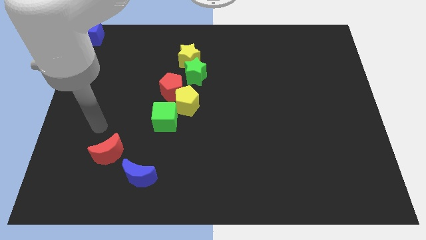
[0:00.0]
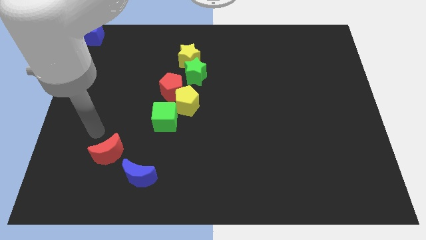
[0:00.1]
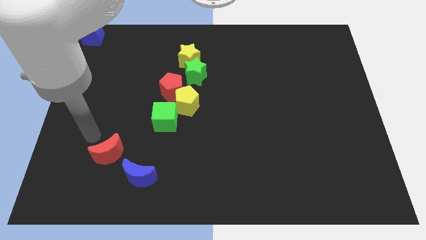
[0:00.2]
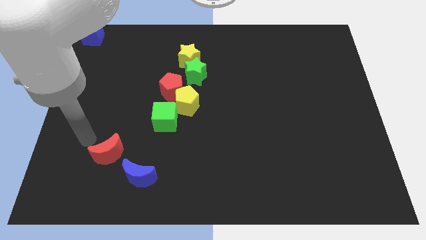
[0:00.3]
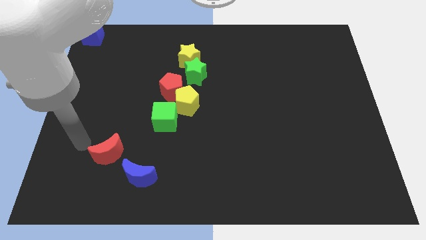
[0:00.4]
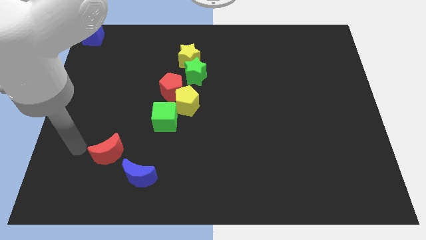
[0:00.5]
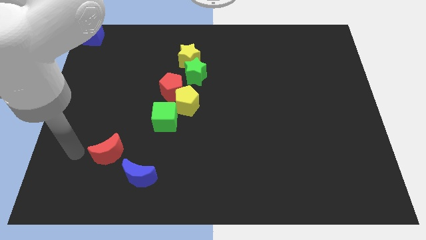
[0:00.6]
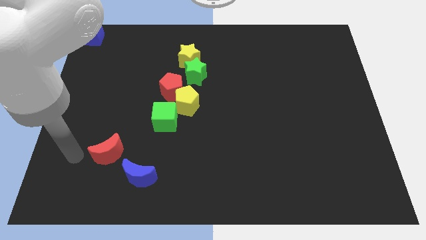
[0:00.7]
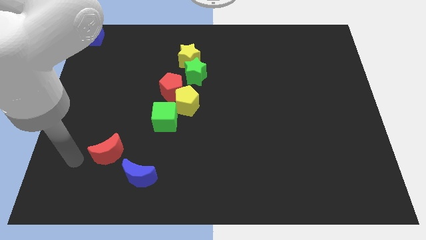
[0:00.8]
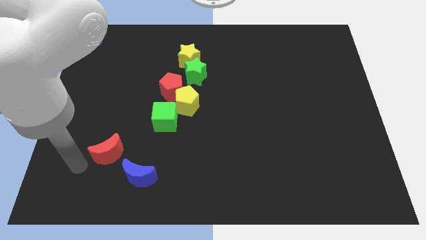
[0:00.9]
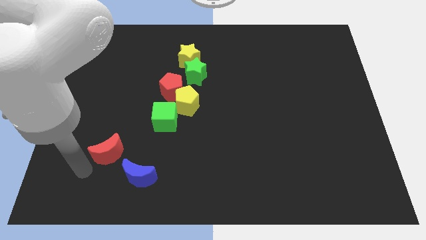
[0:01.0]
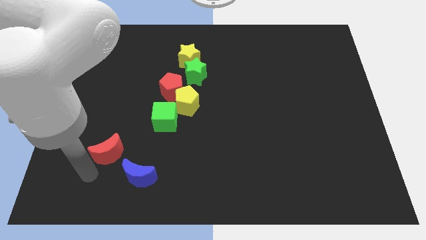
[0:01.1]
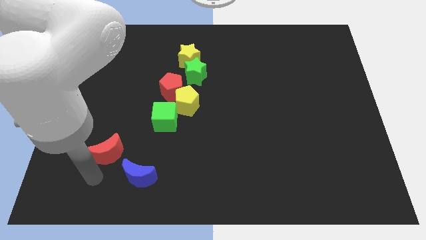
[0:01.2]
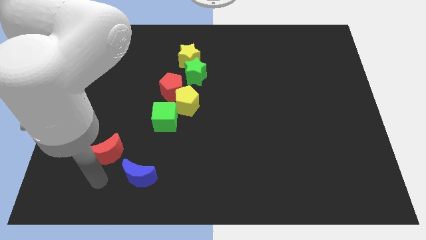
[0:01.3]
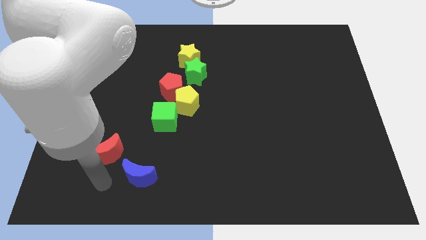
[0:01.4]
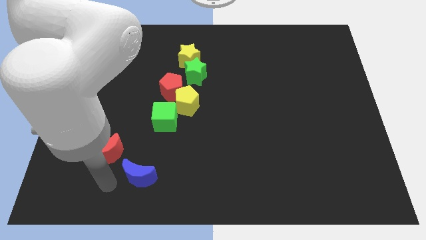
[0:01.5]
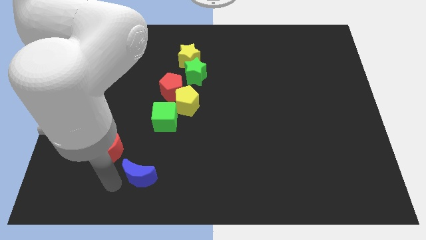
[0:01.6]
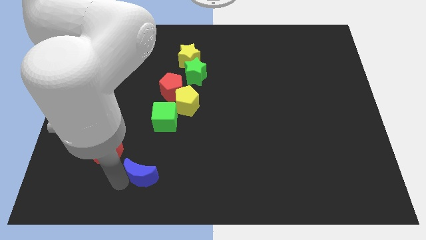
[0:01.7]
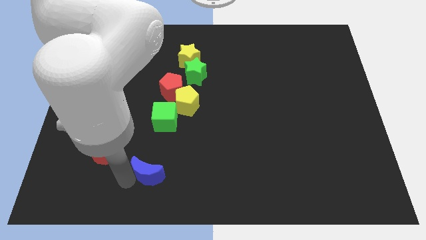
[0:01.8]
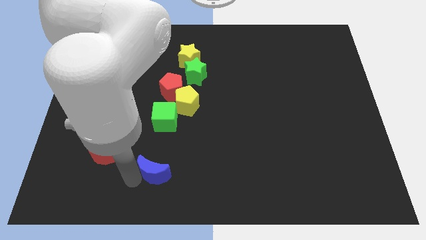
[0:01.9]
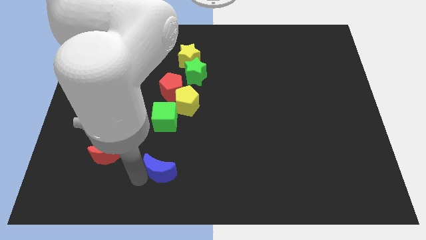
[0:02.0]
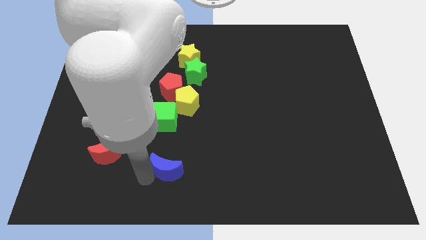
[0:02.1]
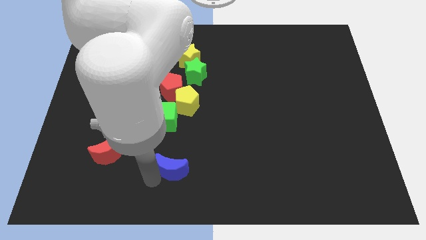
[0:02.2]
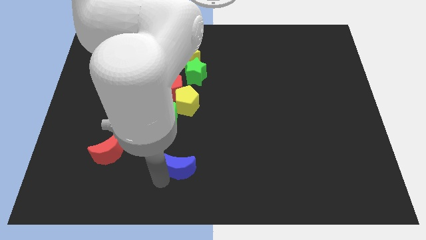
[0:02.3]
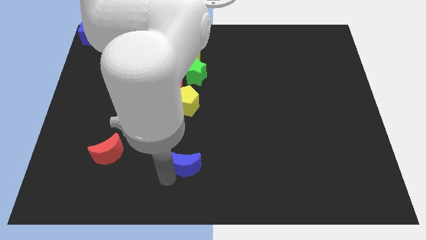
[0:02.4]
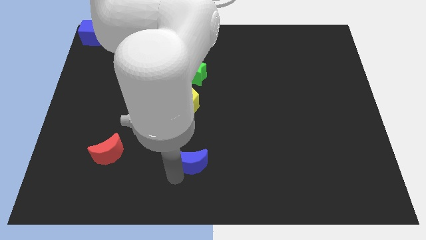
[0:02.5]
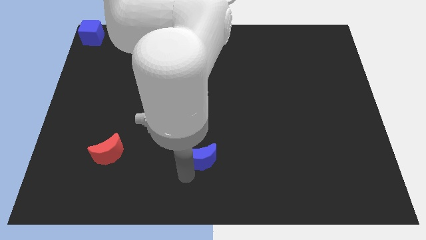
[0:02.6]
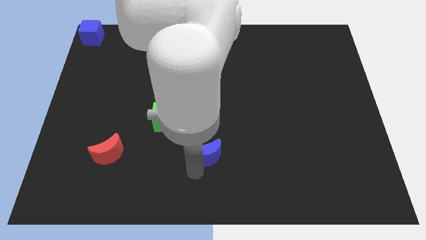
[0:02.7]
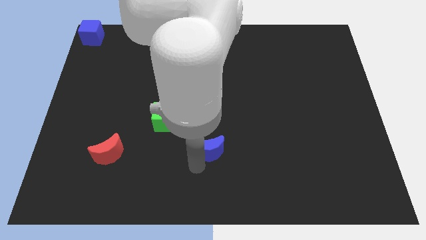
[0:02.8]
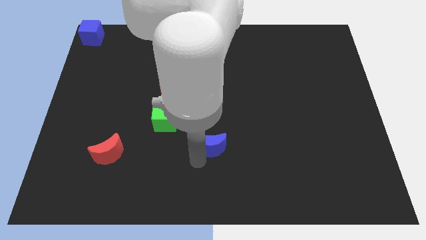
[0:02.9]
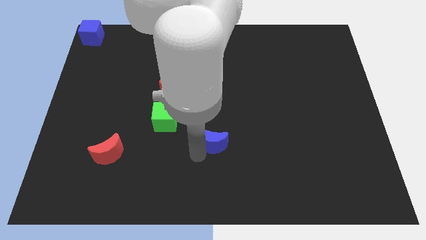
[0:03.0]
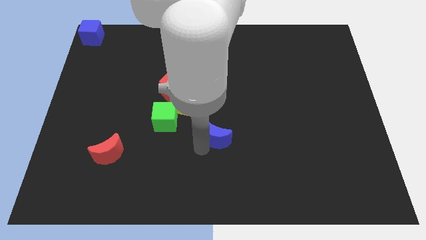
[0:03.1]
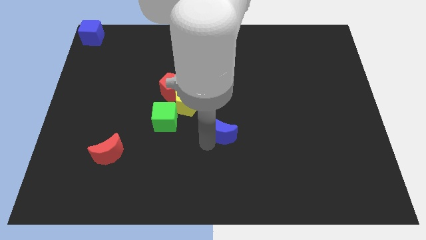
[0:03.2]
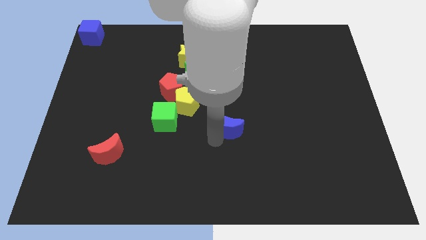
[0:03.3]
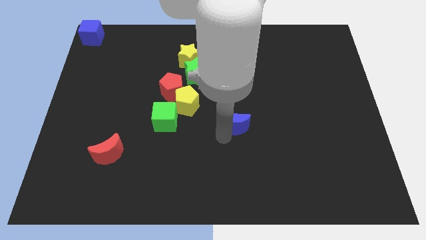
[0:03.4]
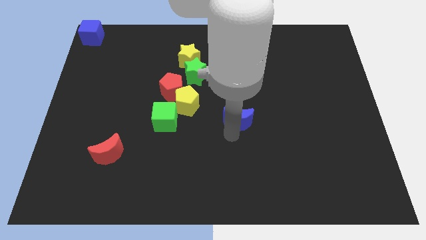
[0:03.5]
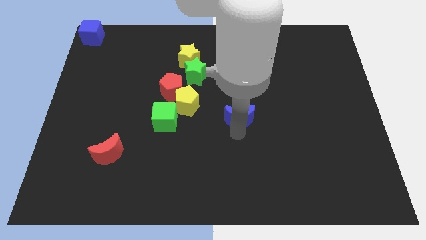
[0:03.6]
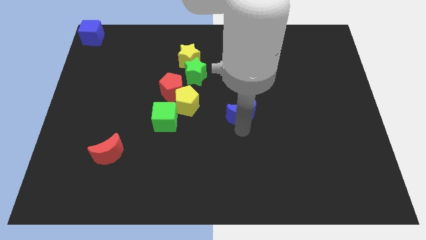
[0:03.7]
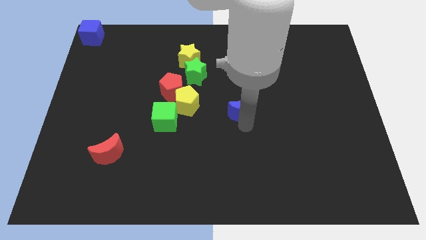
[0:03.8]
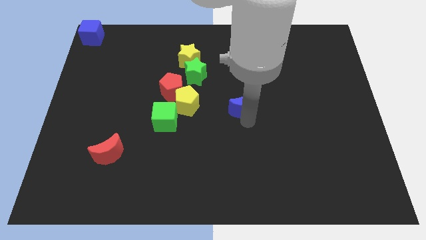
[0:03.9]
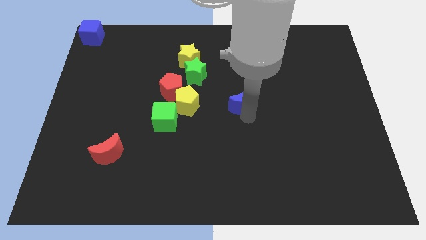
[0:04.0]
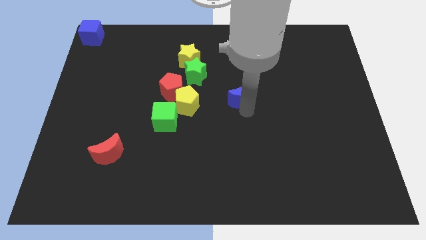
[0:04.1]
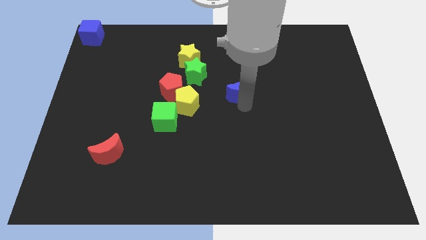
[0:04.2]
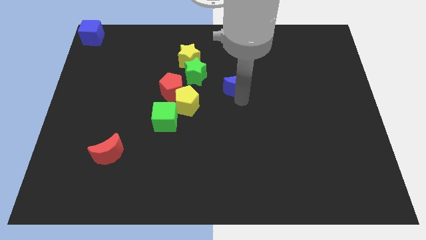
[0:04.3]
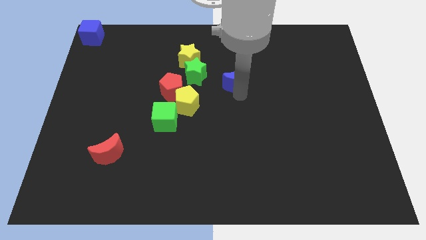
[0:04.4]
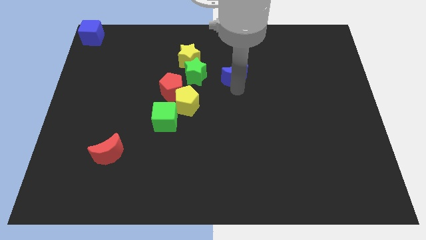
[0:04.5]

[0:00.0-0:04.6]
move the blue crescent towards the right side of the green star

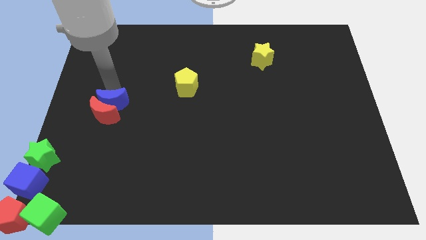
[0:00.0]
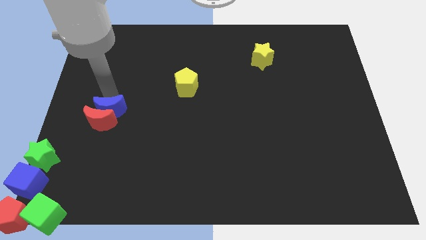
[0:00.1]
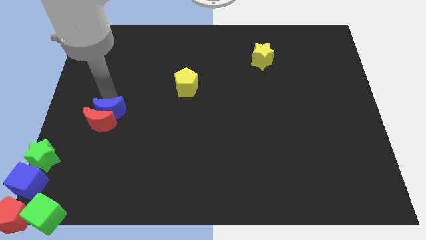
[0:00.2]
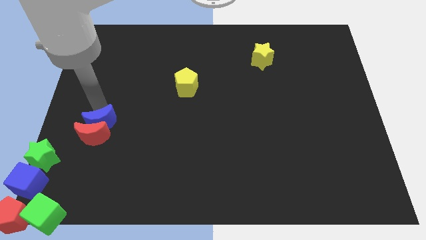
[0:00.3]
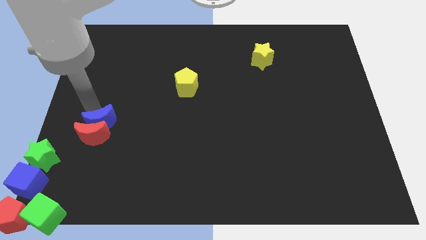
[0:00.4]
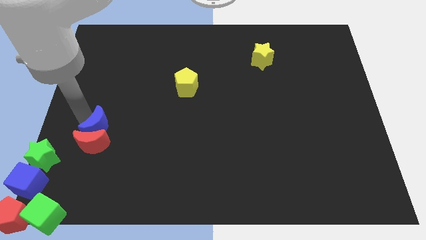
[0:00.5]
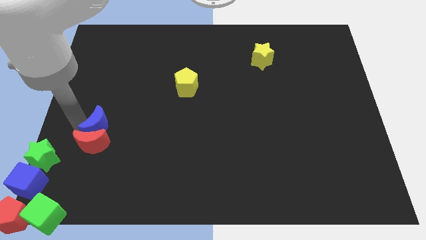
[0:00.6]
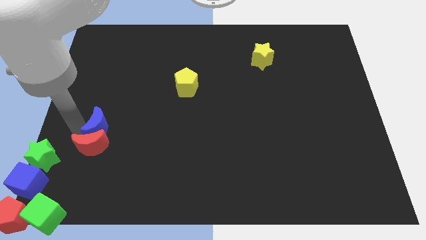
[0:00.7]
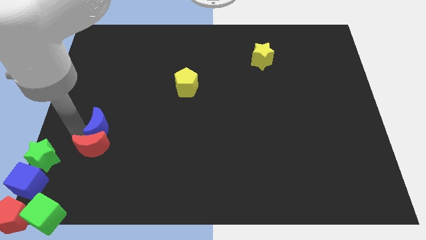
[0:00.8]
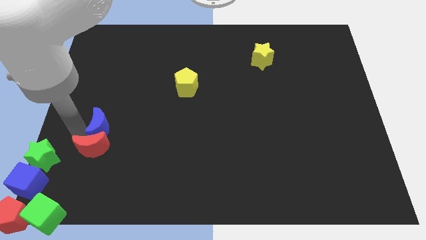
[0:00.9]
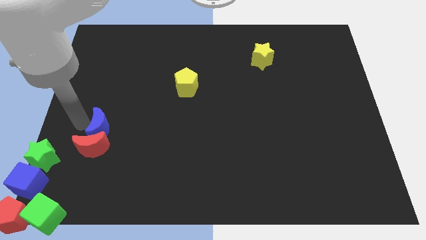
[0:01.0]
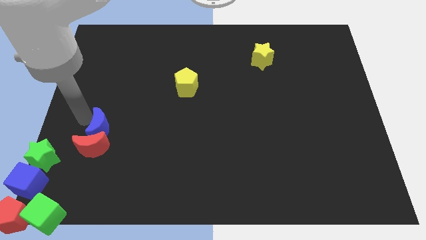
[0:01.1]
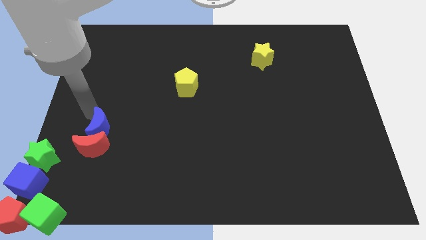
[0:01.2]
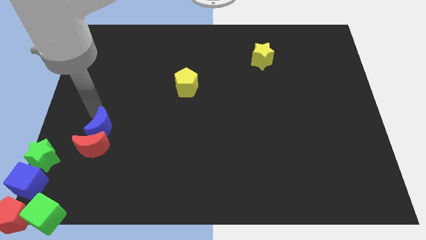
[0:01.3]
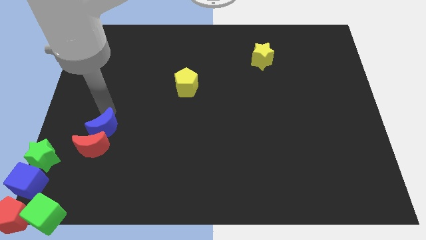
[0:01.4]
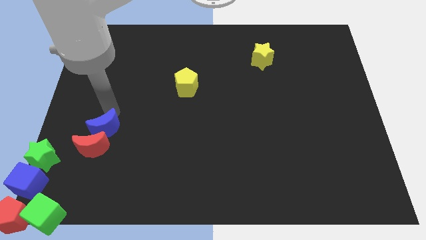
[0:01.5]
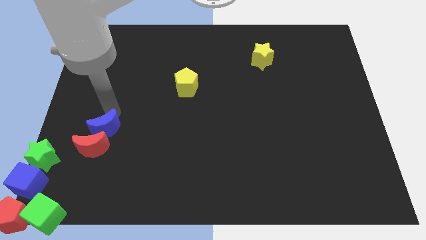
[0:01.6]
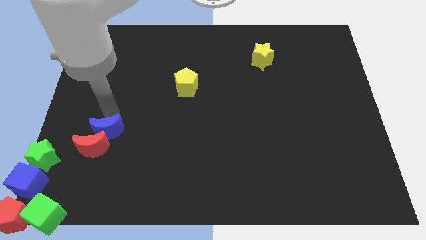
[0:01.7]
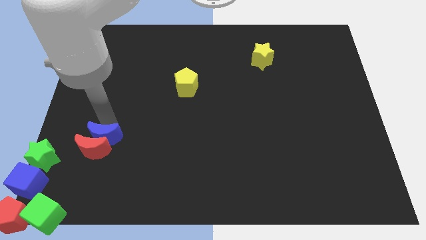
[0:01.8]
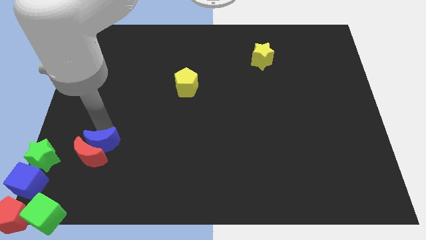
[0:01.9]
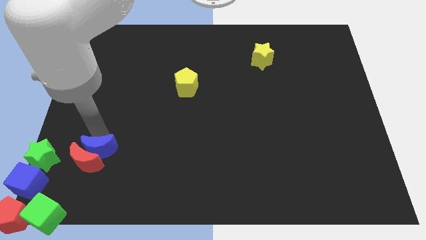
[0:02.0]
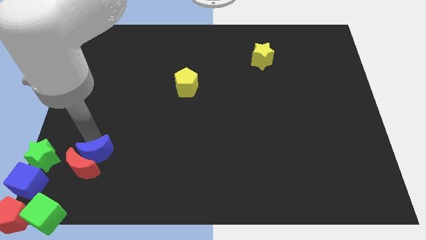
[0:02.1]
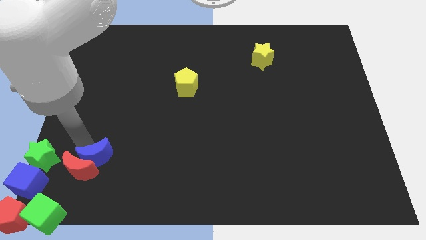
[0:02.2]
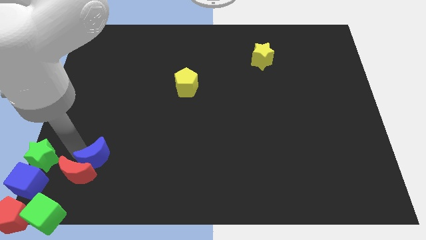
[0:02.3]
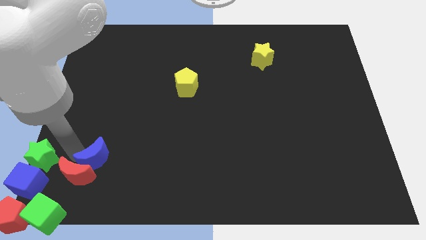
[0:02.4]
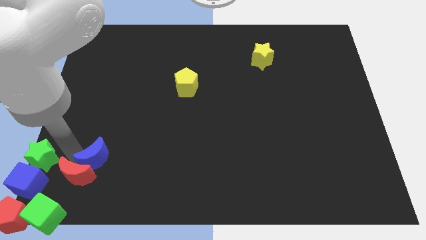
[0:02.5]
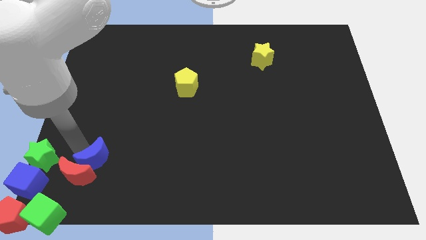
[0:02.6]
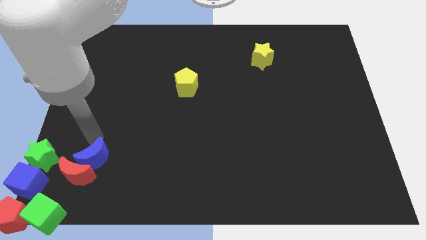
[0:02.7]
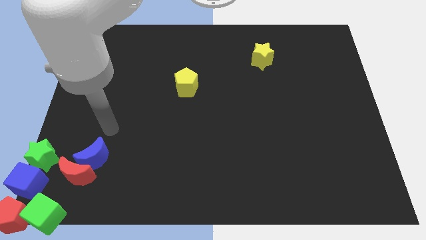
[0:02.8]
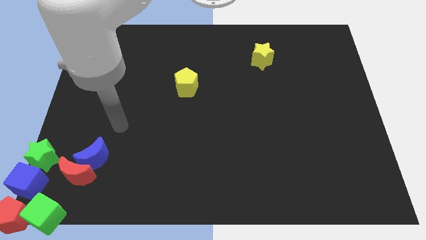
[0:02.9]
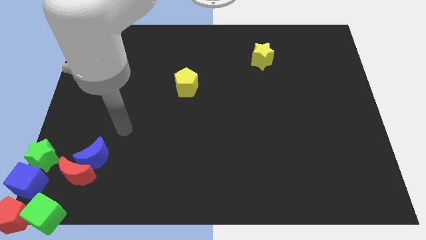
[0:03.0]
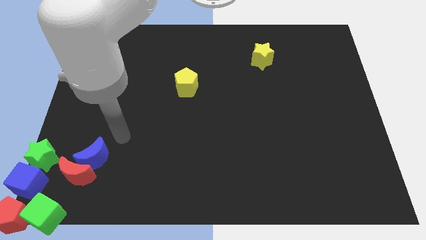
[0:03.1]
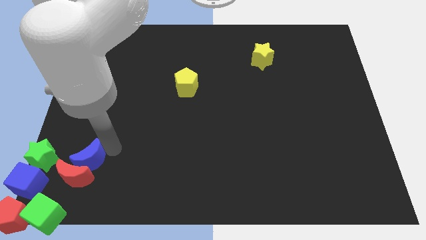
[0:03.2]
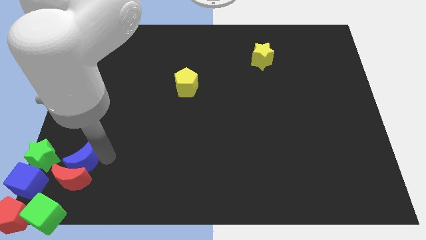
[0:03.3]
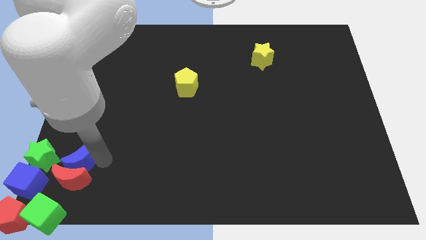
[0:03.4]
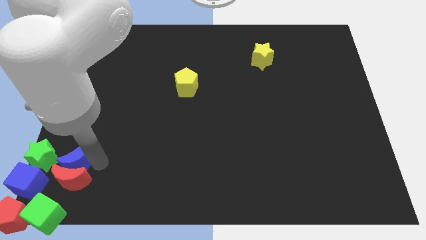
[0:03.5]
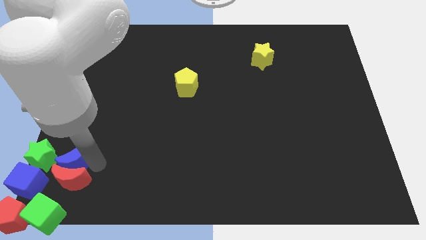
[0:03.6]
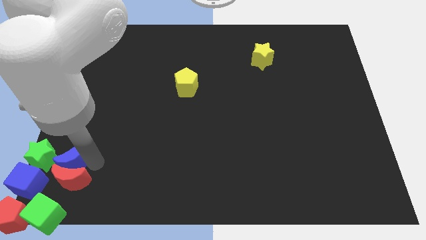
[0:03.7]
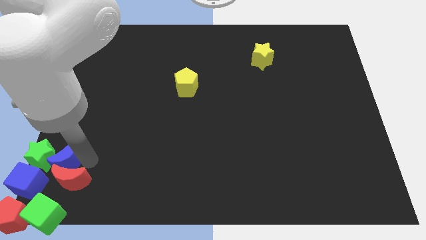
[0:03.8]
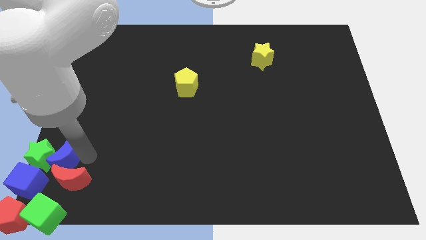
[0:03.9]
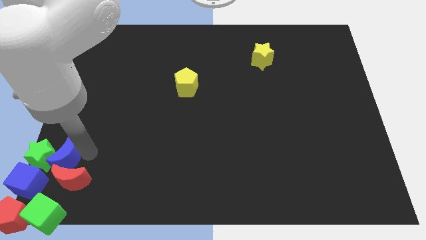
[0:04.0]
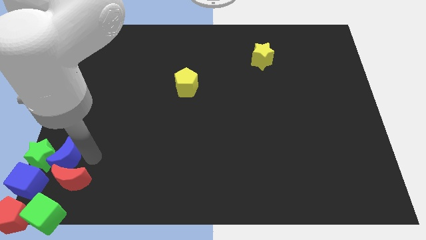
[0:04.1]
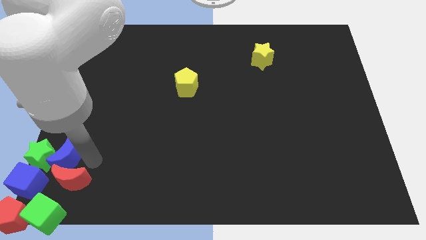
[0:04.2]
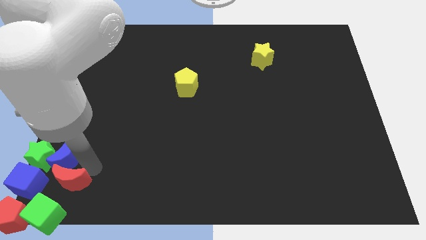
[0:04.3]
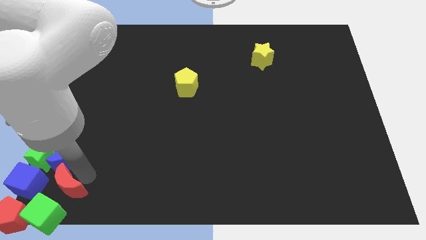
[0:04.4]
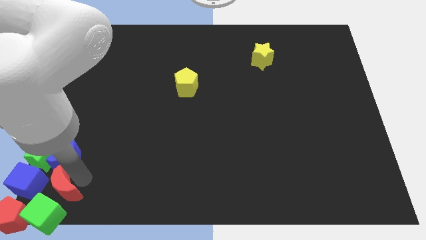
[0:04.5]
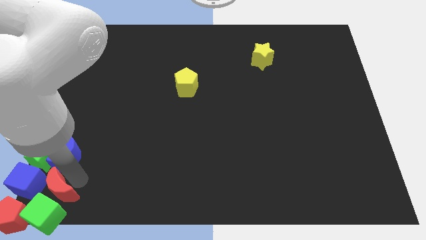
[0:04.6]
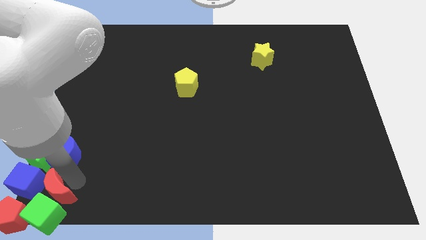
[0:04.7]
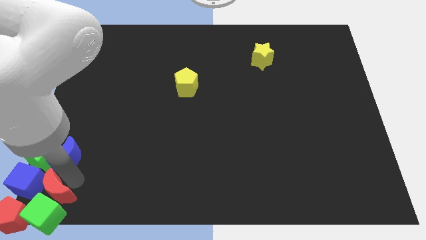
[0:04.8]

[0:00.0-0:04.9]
move the both crescents to the group of blocks
